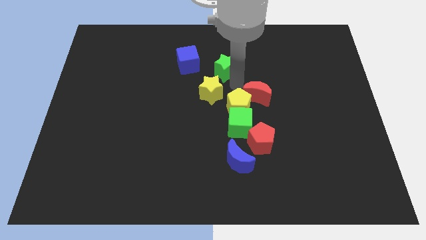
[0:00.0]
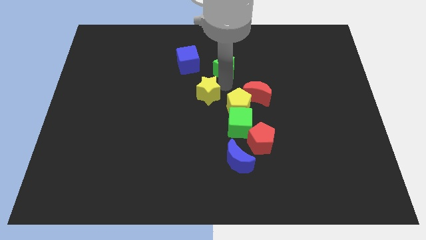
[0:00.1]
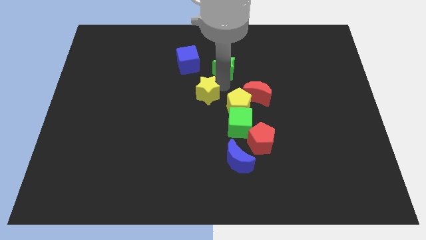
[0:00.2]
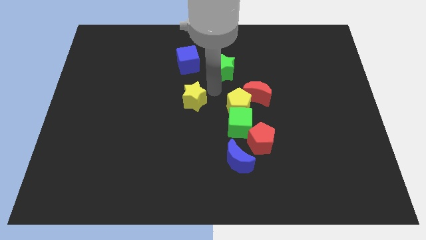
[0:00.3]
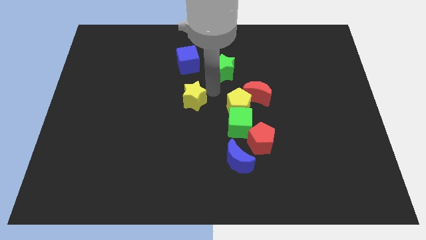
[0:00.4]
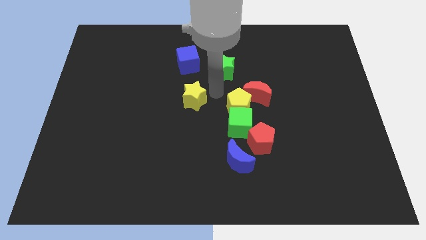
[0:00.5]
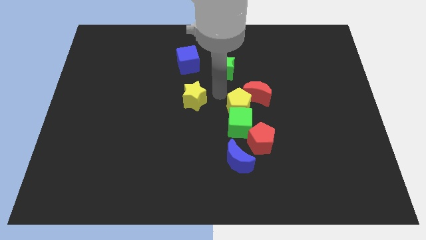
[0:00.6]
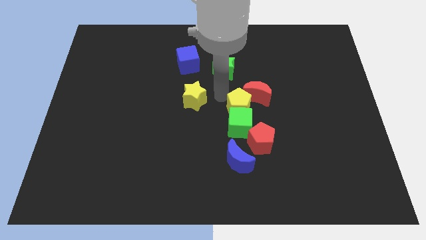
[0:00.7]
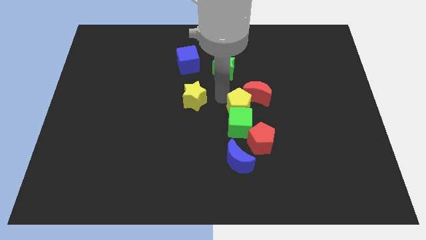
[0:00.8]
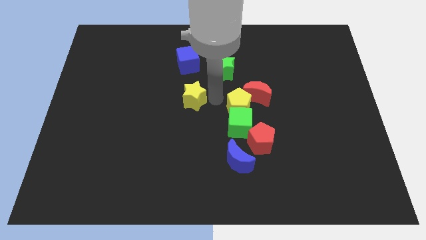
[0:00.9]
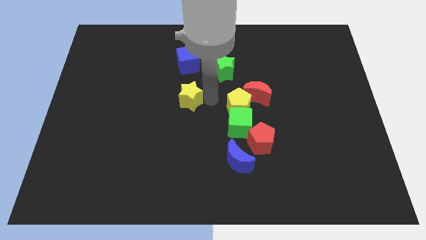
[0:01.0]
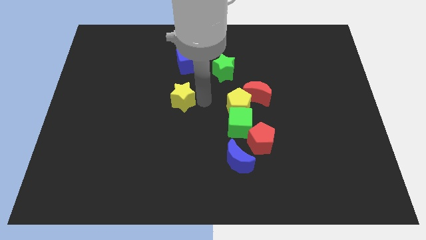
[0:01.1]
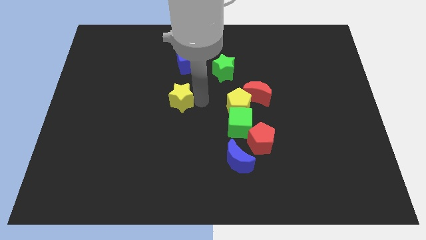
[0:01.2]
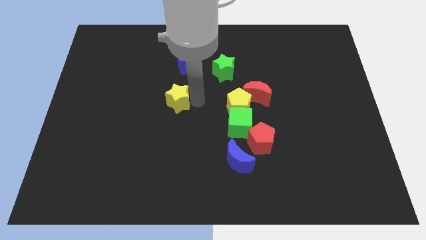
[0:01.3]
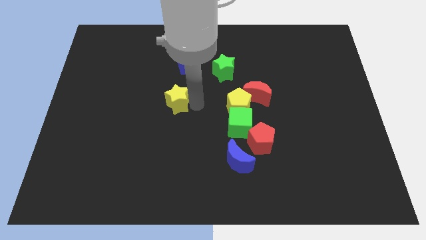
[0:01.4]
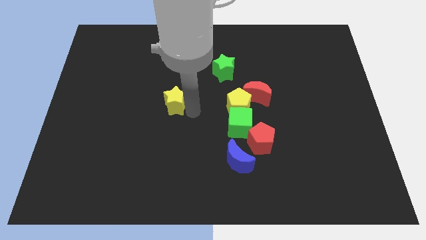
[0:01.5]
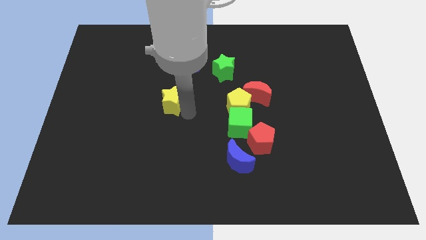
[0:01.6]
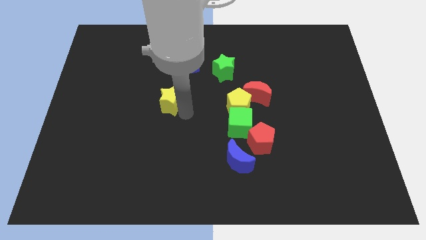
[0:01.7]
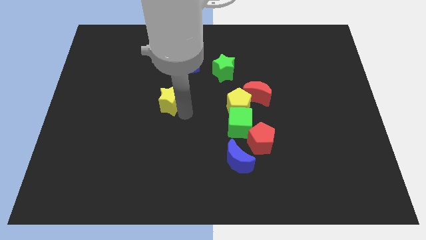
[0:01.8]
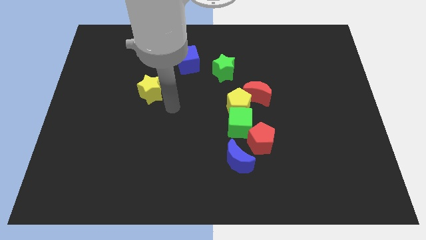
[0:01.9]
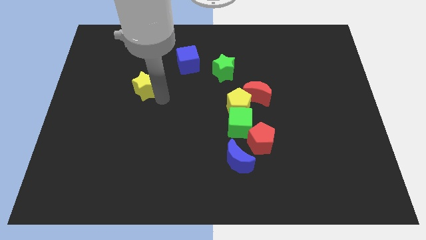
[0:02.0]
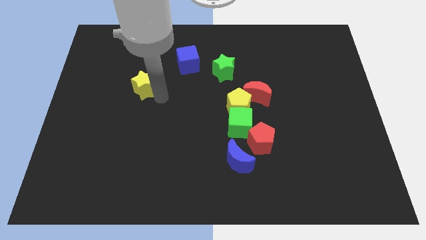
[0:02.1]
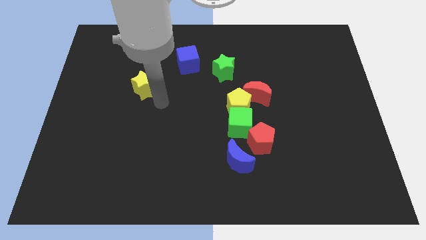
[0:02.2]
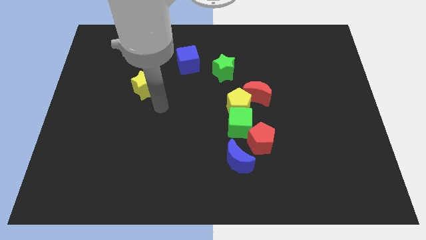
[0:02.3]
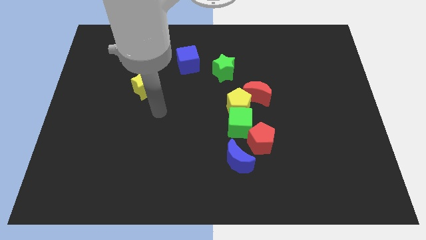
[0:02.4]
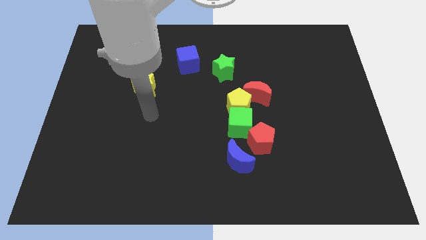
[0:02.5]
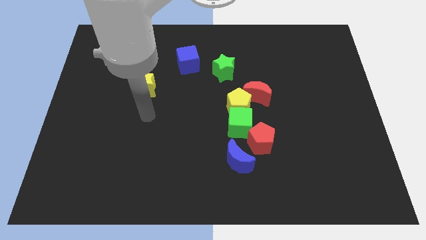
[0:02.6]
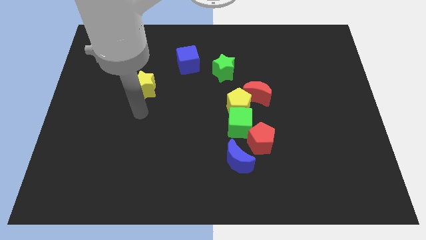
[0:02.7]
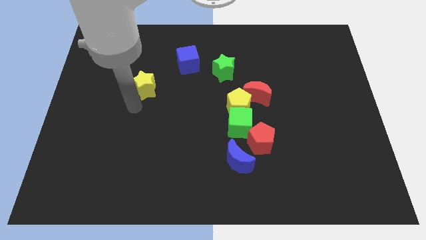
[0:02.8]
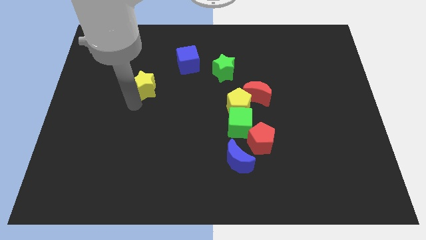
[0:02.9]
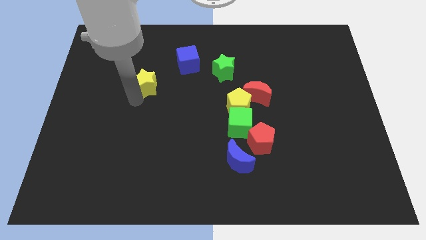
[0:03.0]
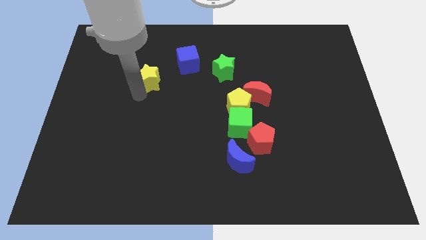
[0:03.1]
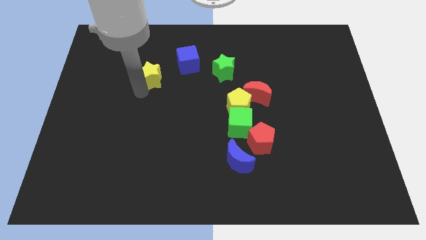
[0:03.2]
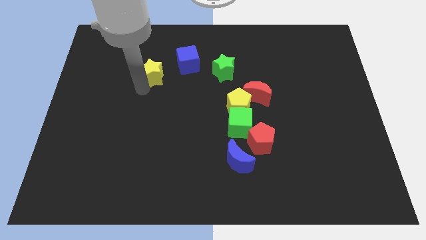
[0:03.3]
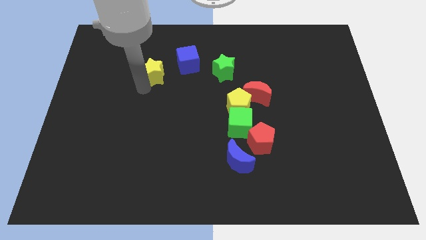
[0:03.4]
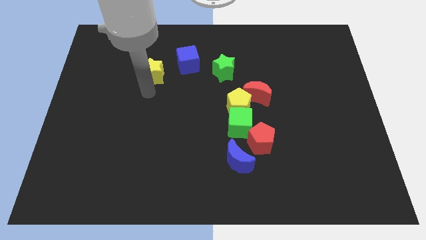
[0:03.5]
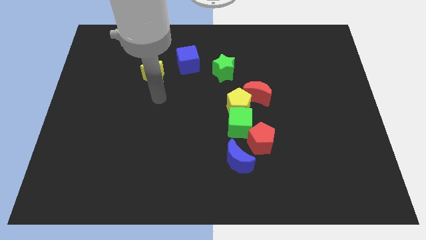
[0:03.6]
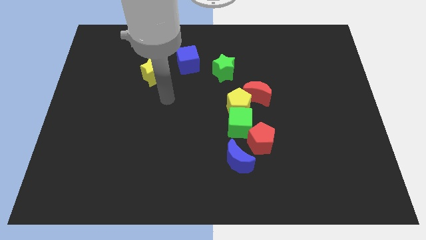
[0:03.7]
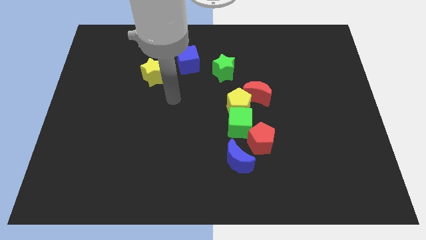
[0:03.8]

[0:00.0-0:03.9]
move the yellow penatgon to the left of blue cube

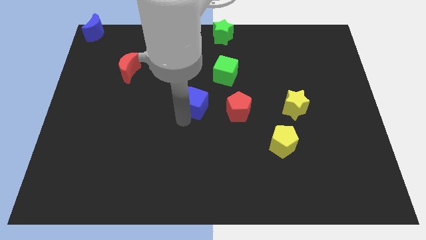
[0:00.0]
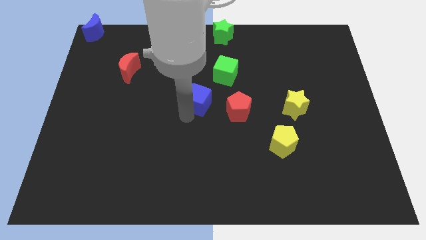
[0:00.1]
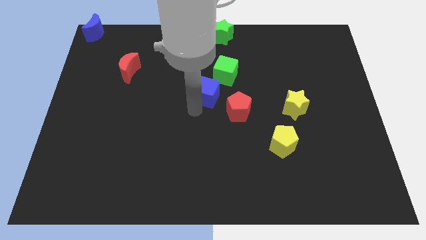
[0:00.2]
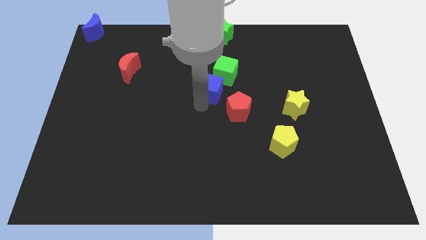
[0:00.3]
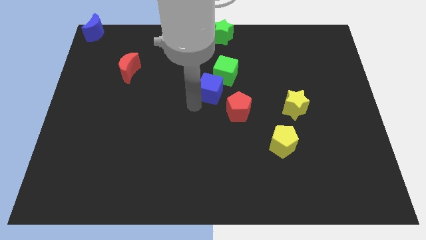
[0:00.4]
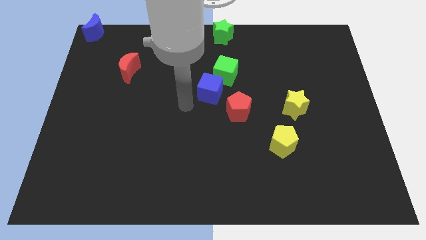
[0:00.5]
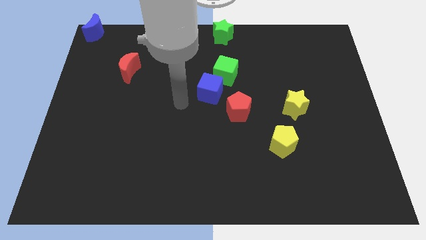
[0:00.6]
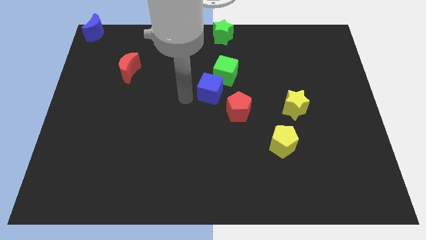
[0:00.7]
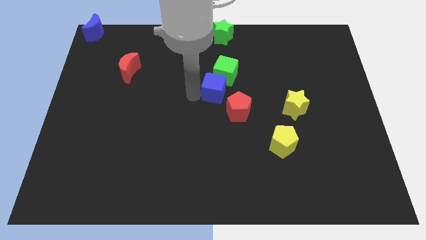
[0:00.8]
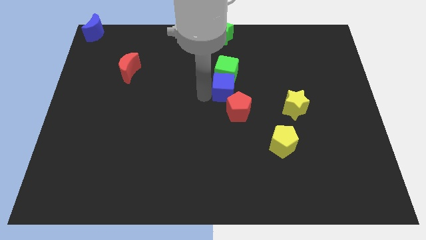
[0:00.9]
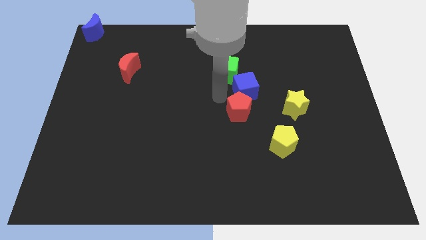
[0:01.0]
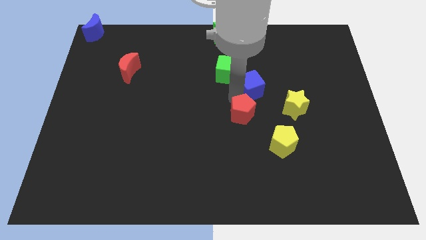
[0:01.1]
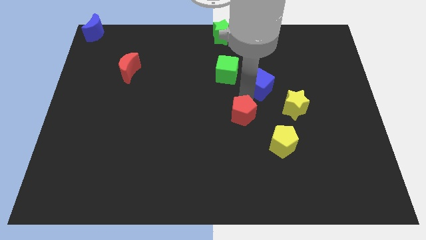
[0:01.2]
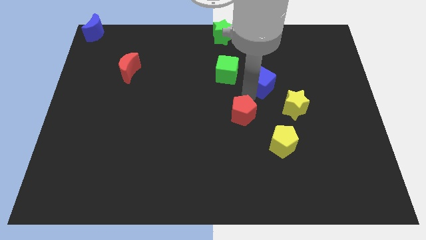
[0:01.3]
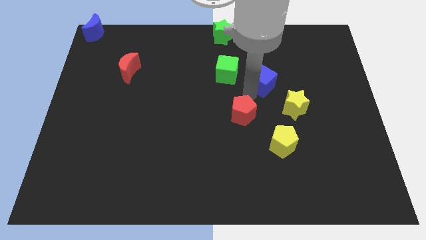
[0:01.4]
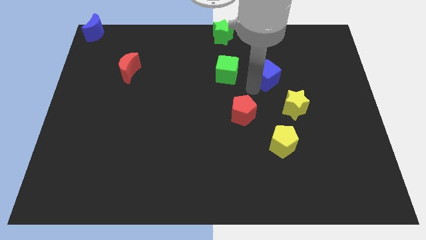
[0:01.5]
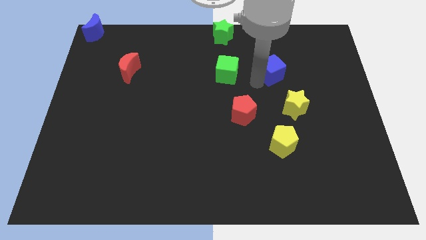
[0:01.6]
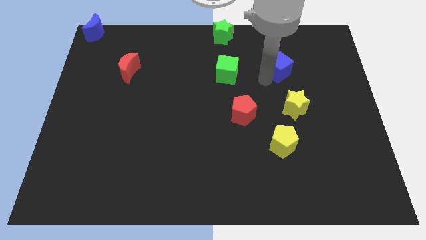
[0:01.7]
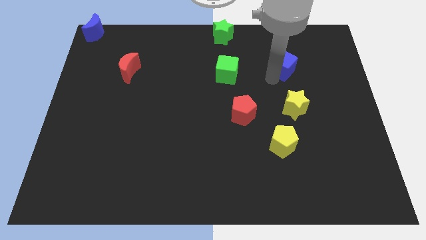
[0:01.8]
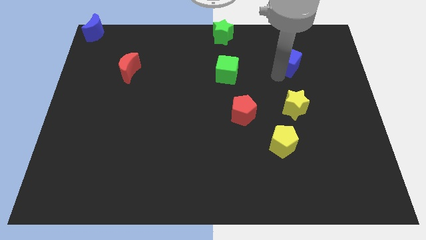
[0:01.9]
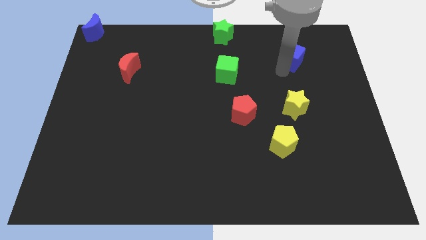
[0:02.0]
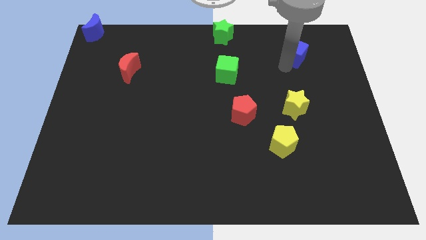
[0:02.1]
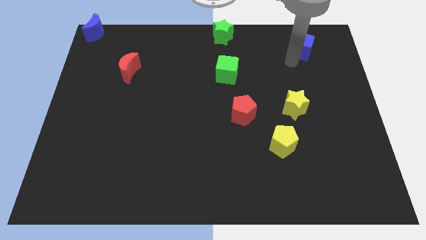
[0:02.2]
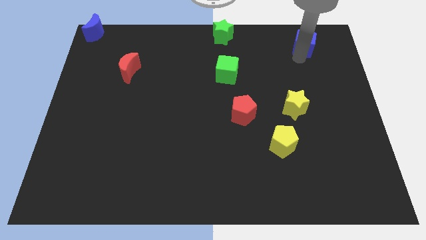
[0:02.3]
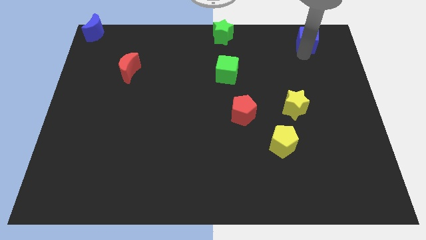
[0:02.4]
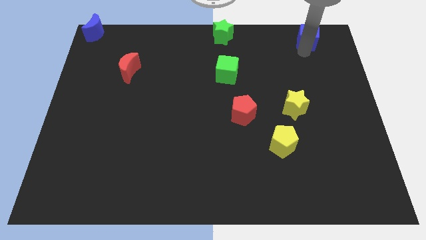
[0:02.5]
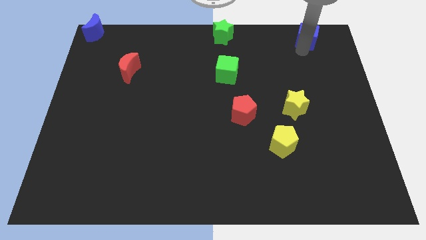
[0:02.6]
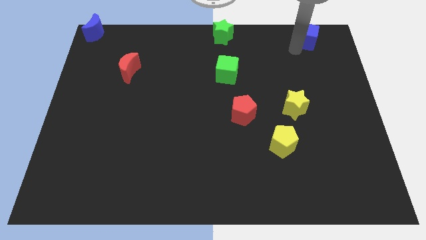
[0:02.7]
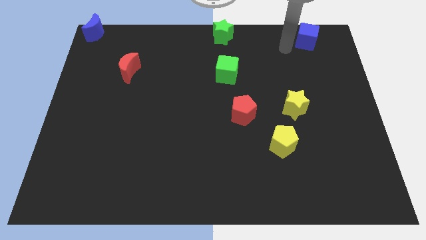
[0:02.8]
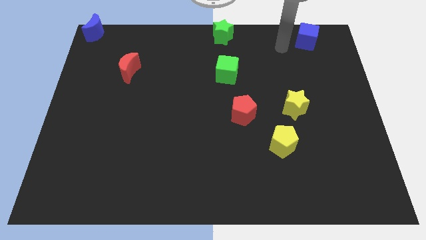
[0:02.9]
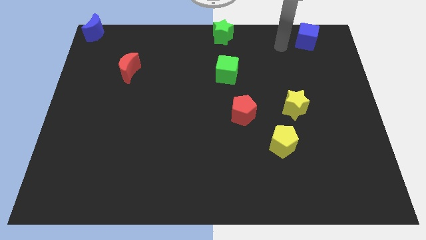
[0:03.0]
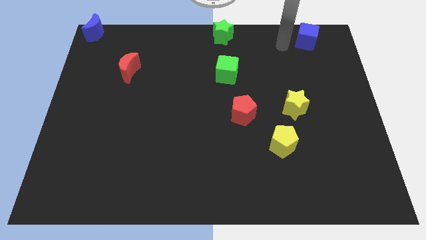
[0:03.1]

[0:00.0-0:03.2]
slide the blue cube to the right side of the green star

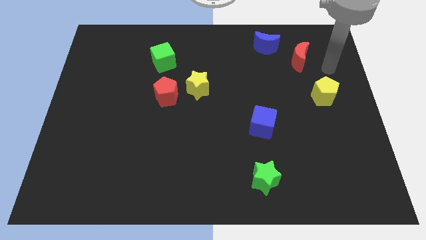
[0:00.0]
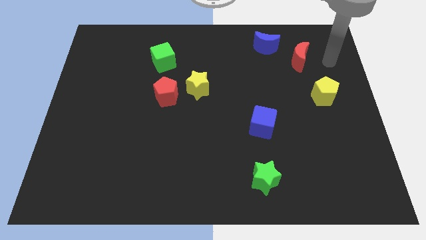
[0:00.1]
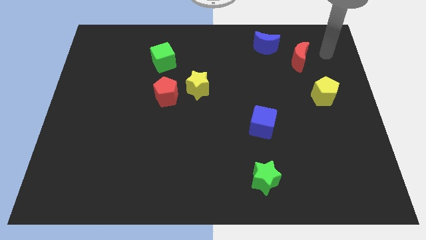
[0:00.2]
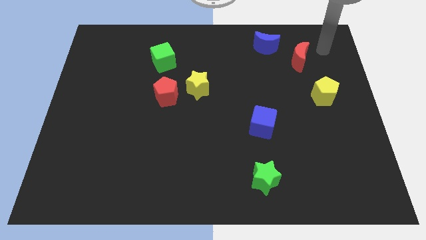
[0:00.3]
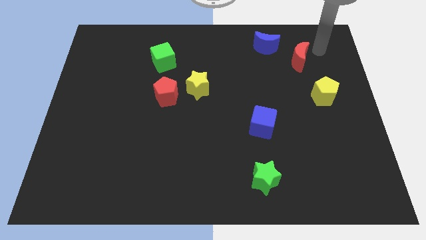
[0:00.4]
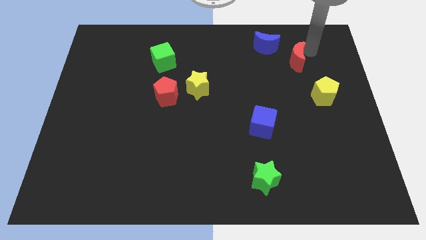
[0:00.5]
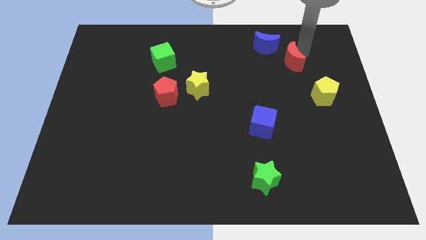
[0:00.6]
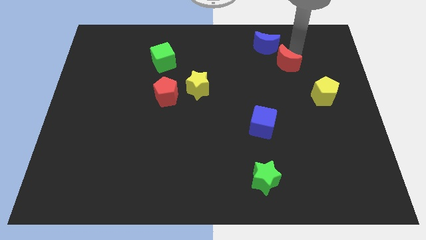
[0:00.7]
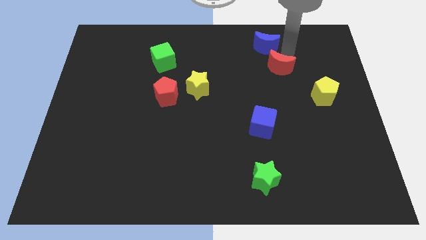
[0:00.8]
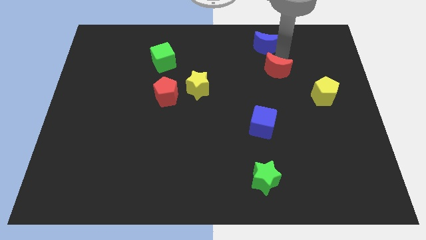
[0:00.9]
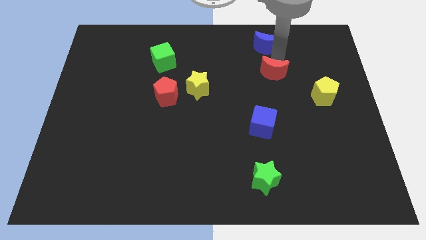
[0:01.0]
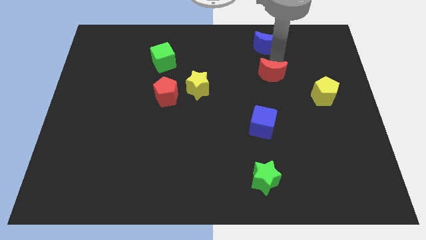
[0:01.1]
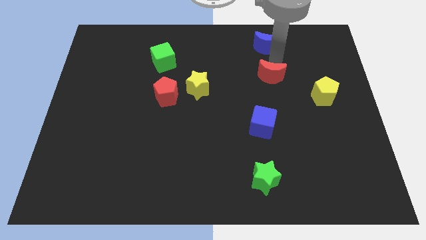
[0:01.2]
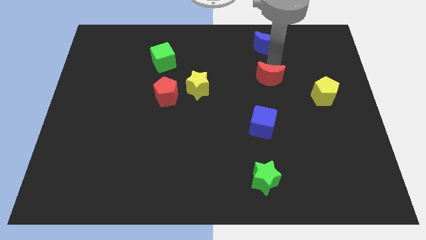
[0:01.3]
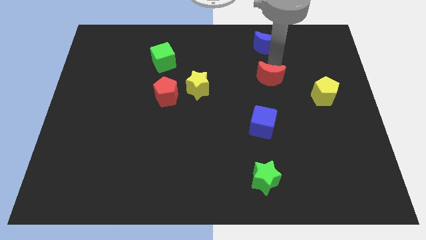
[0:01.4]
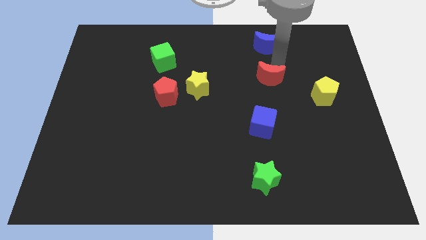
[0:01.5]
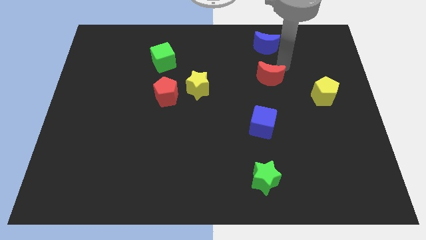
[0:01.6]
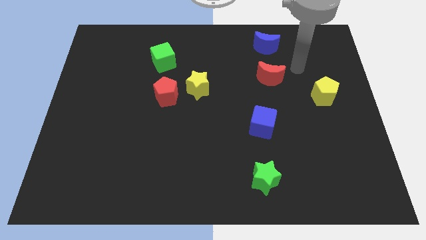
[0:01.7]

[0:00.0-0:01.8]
move the red crescent above the blue cube

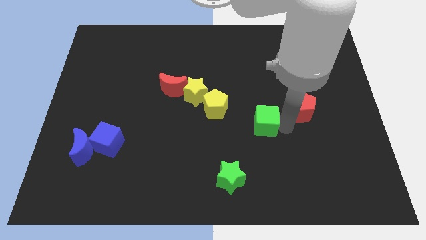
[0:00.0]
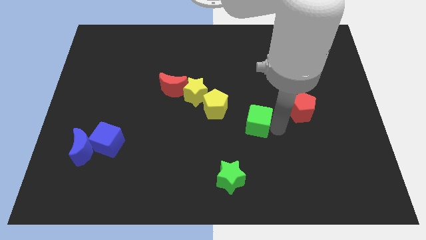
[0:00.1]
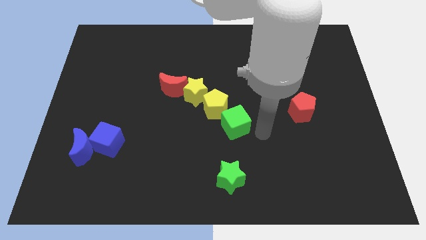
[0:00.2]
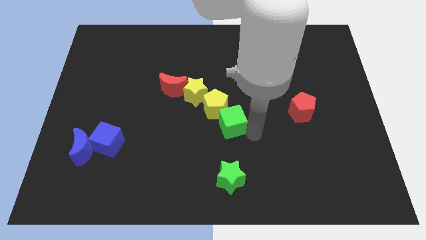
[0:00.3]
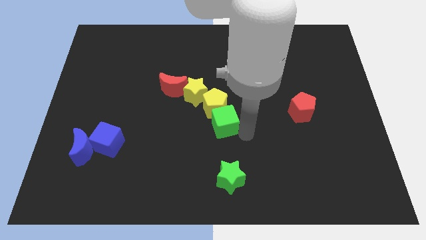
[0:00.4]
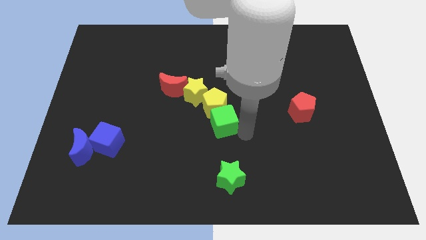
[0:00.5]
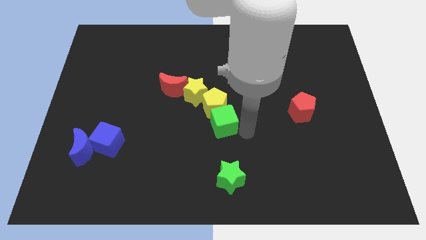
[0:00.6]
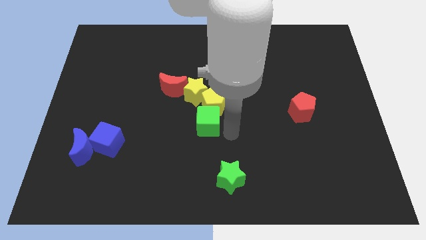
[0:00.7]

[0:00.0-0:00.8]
slide green cube below yellow pentagon
